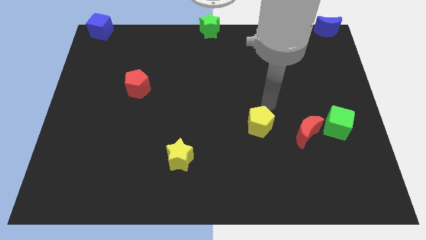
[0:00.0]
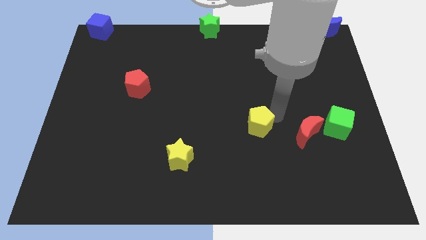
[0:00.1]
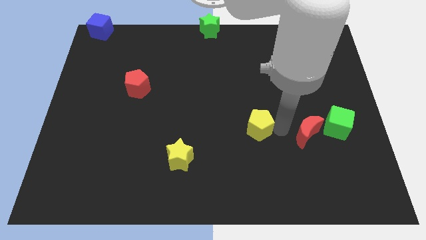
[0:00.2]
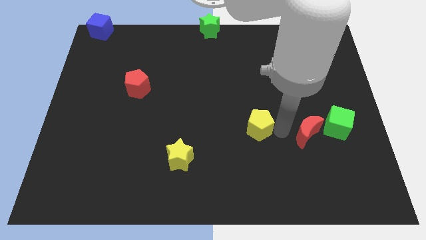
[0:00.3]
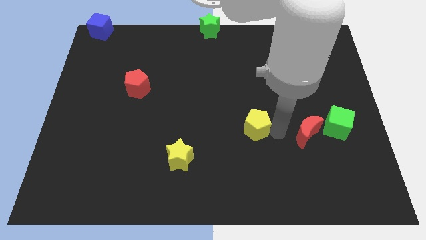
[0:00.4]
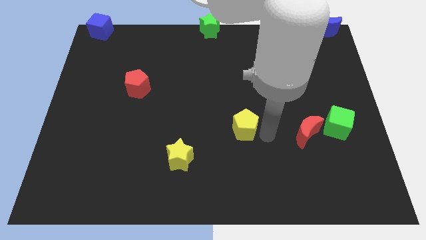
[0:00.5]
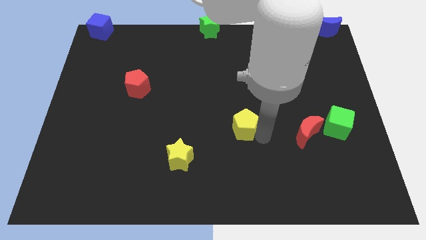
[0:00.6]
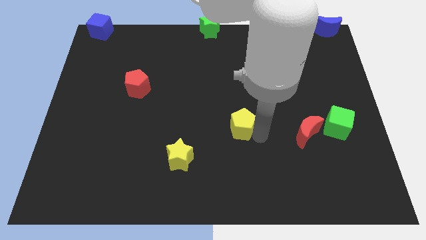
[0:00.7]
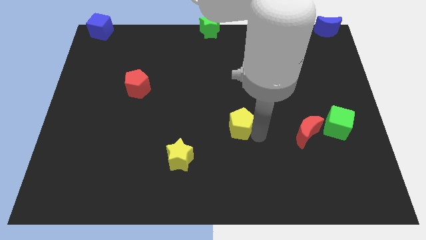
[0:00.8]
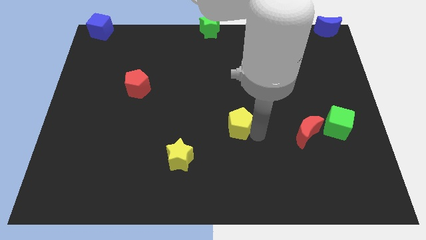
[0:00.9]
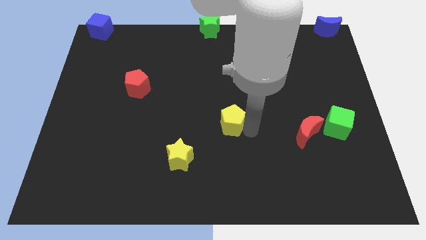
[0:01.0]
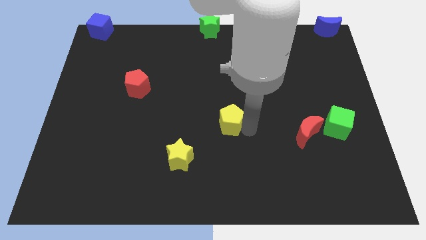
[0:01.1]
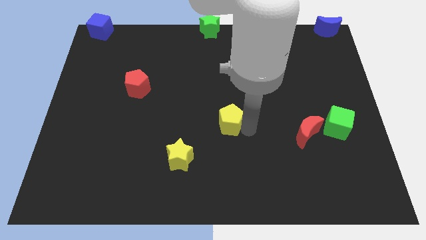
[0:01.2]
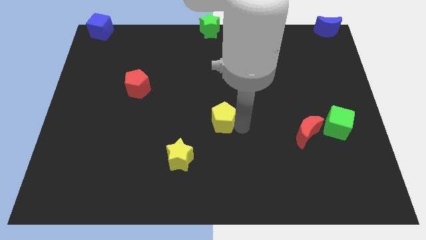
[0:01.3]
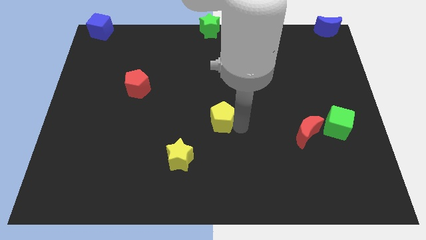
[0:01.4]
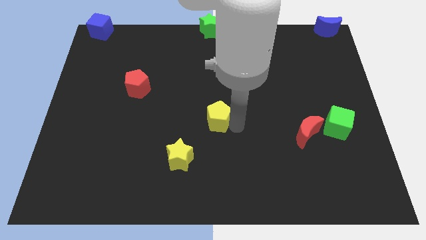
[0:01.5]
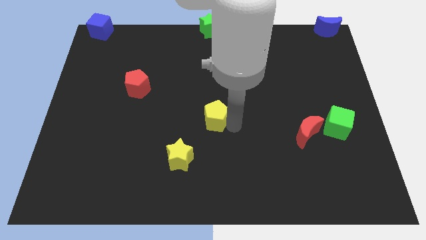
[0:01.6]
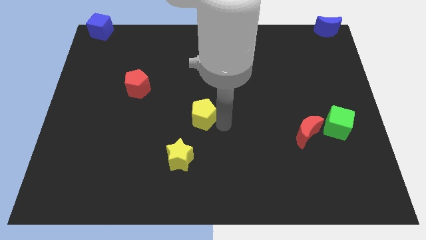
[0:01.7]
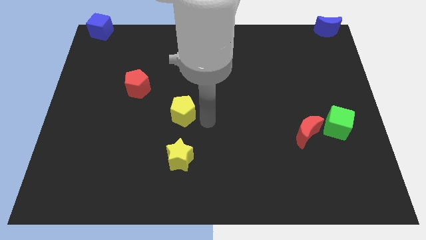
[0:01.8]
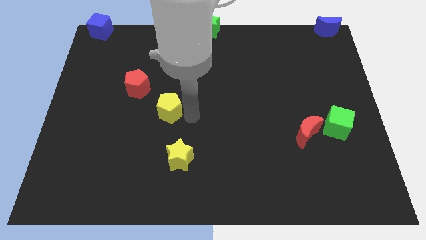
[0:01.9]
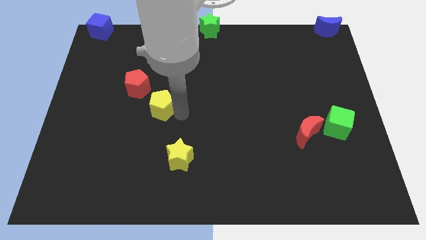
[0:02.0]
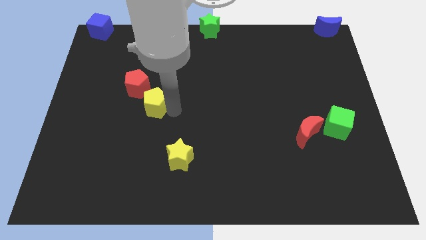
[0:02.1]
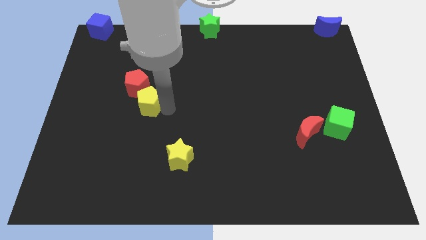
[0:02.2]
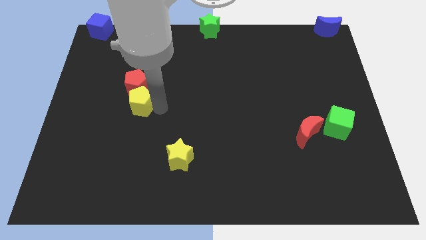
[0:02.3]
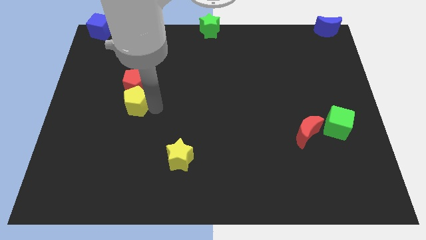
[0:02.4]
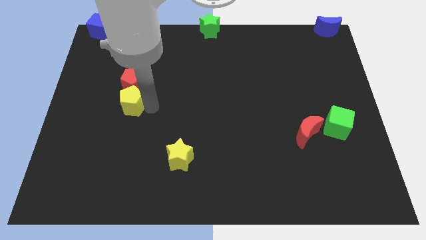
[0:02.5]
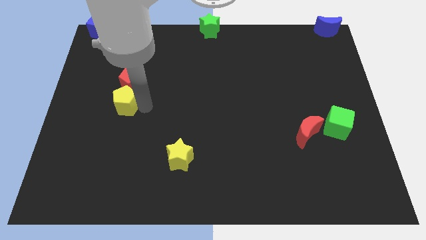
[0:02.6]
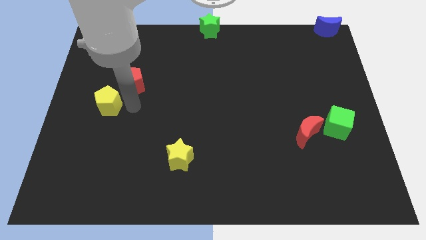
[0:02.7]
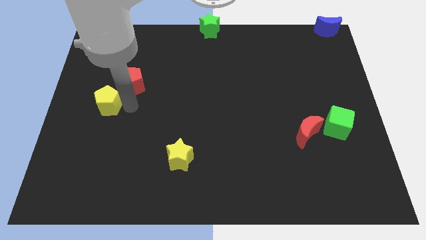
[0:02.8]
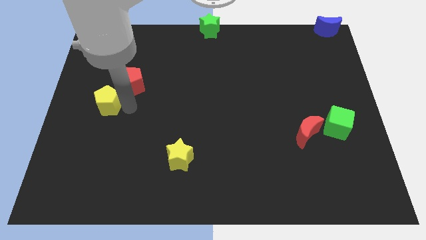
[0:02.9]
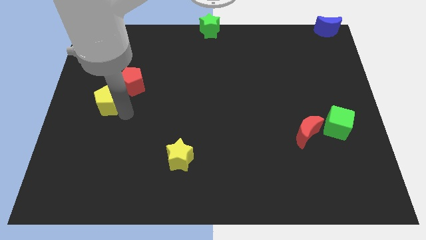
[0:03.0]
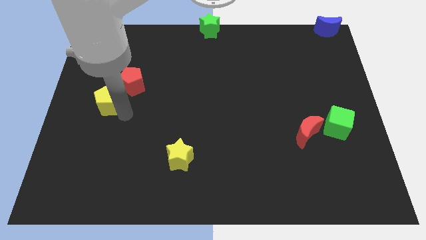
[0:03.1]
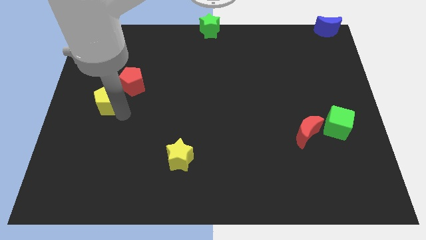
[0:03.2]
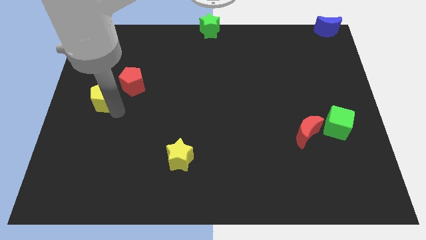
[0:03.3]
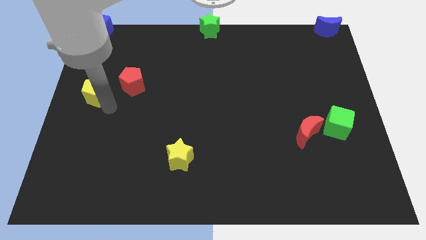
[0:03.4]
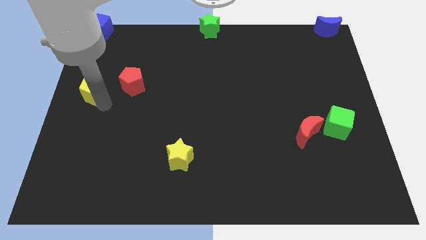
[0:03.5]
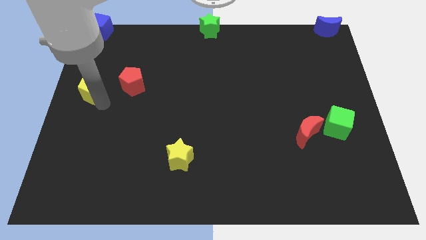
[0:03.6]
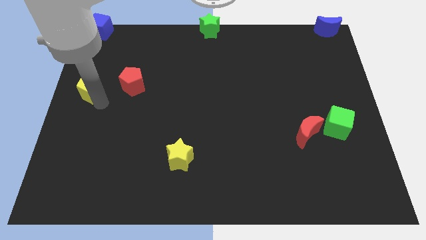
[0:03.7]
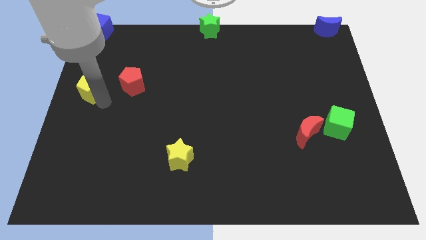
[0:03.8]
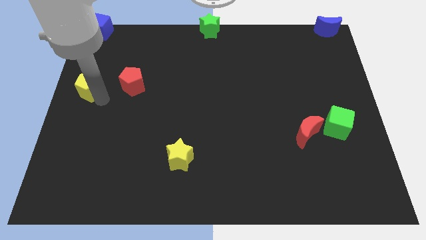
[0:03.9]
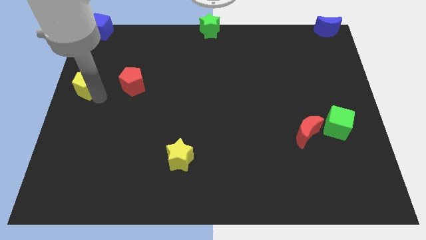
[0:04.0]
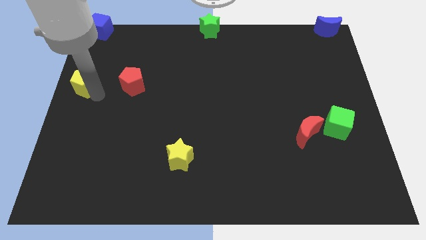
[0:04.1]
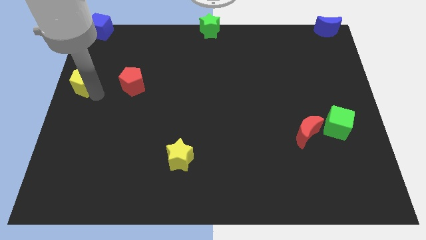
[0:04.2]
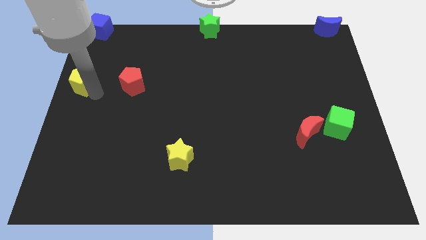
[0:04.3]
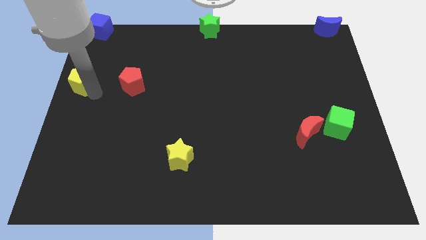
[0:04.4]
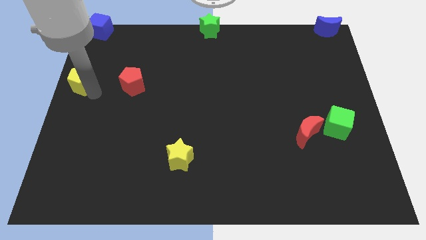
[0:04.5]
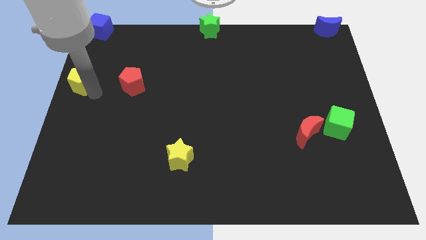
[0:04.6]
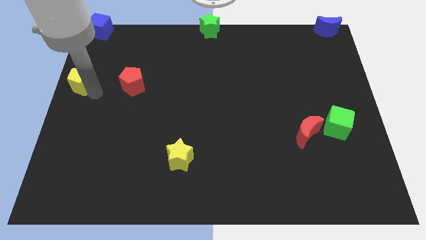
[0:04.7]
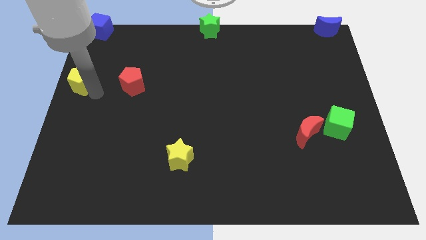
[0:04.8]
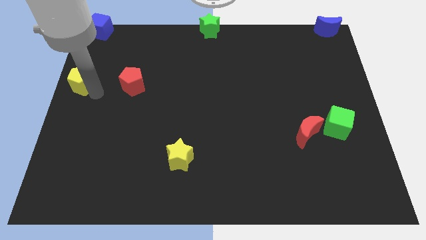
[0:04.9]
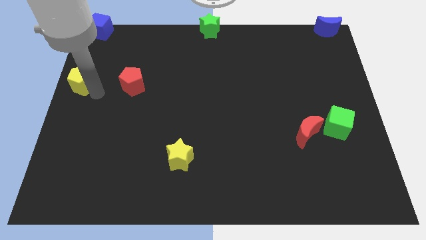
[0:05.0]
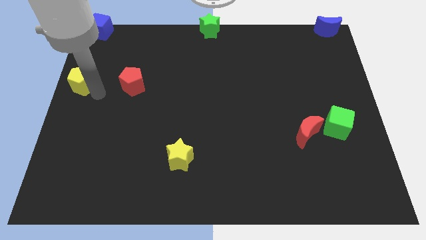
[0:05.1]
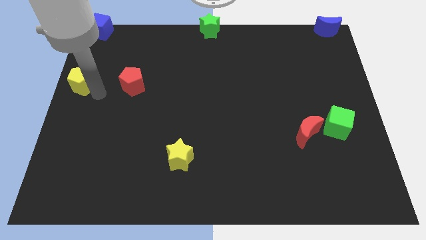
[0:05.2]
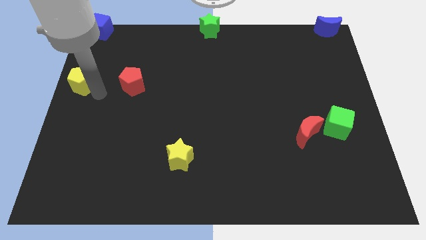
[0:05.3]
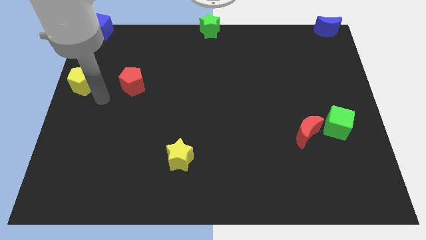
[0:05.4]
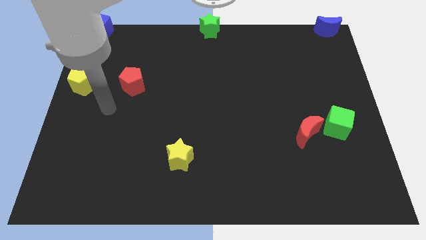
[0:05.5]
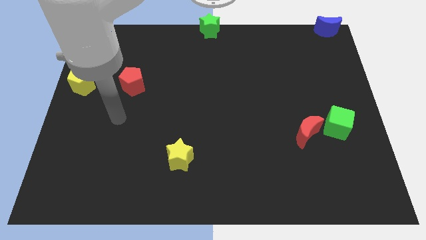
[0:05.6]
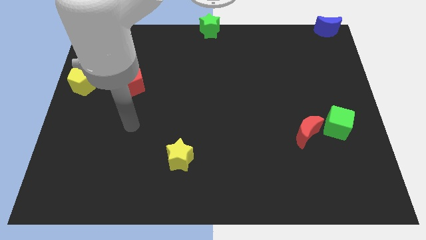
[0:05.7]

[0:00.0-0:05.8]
place the yellow pentagon left to the red pentagon

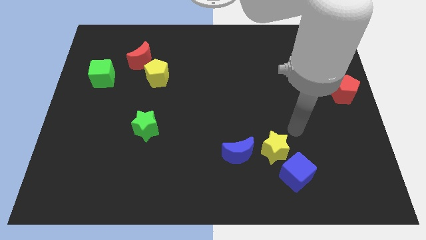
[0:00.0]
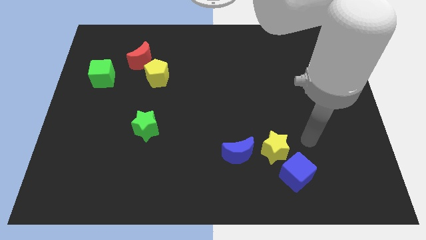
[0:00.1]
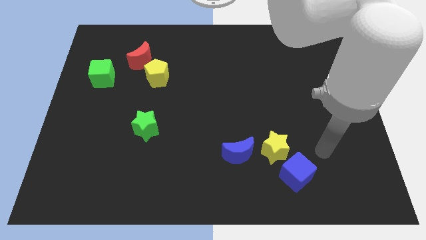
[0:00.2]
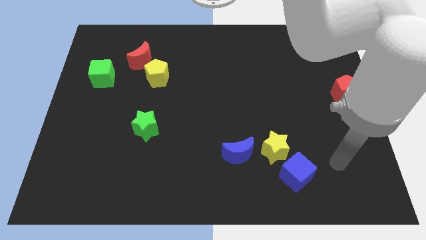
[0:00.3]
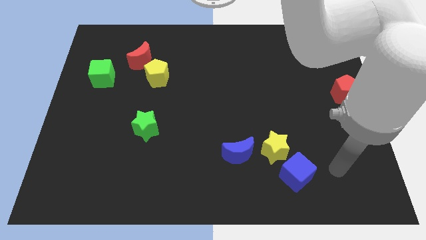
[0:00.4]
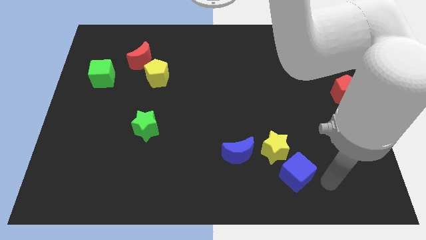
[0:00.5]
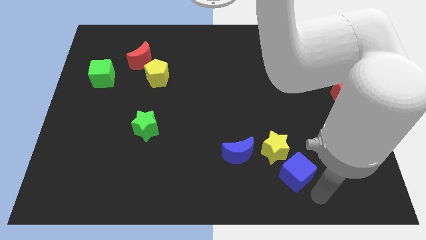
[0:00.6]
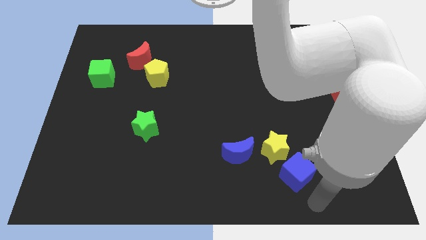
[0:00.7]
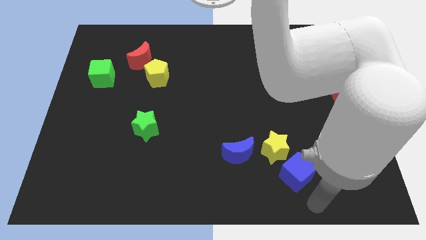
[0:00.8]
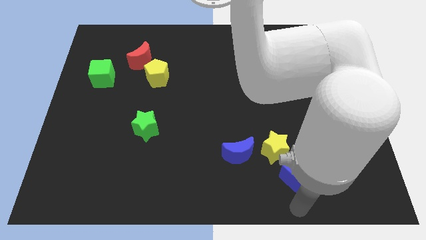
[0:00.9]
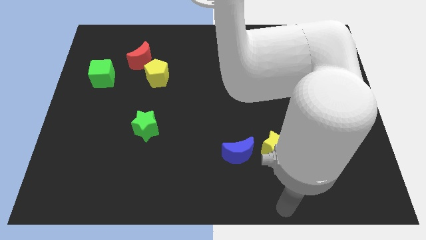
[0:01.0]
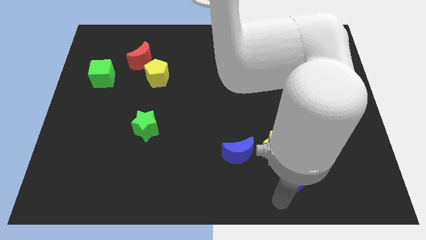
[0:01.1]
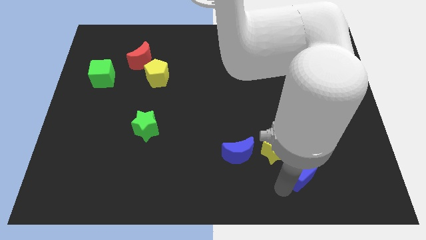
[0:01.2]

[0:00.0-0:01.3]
move your arm below the blue cube

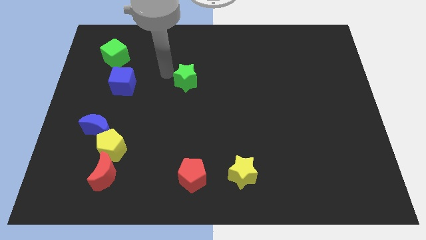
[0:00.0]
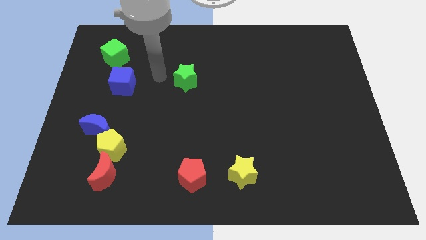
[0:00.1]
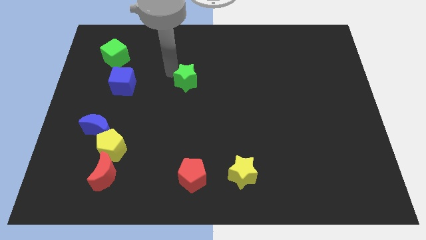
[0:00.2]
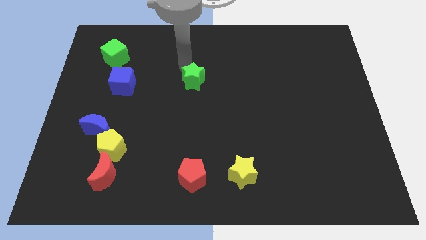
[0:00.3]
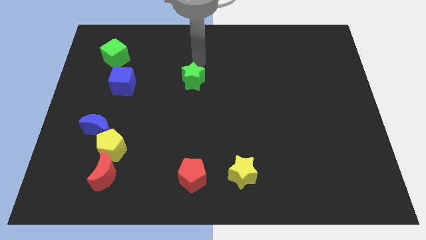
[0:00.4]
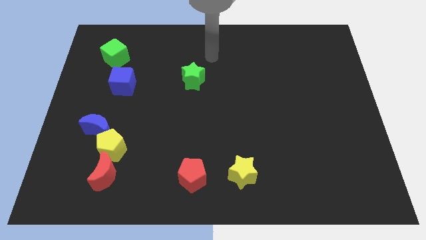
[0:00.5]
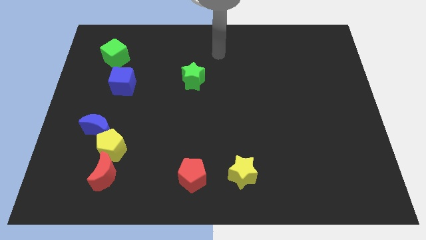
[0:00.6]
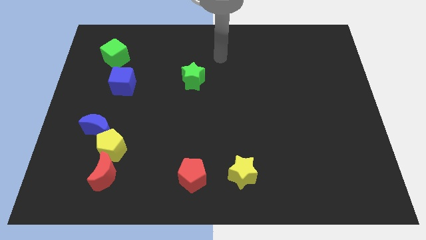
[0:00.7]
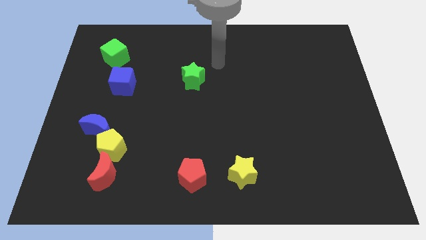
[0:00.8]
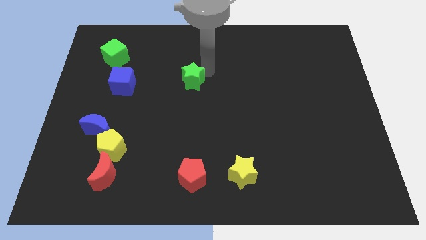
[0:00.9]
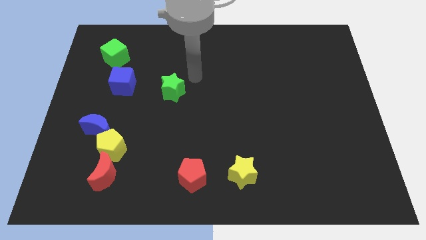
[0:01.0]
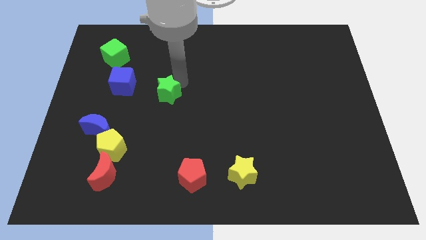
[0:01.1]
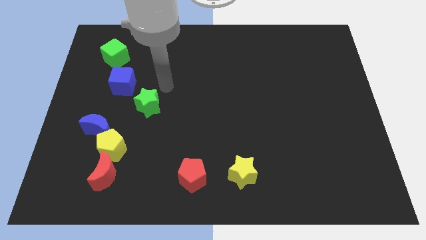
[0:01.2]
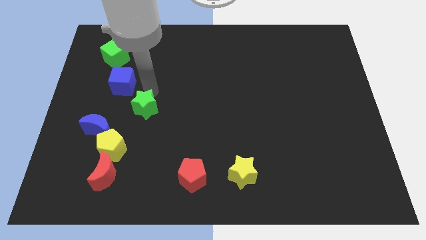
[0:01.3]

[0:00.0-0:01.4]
push the green star towards the yellow pentagon

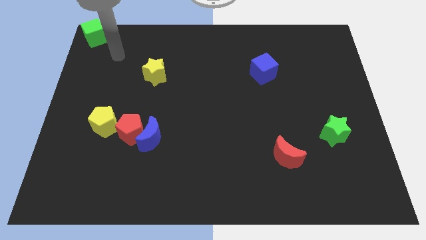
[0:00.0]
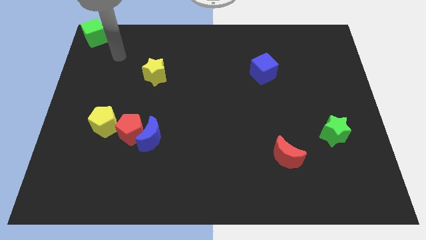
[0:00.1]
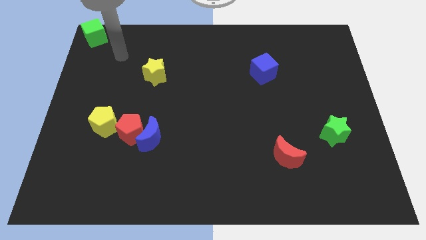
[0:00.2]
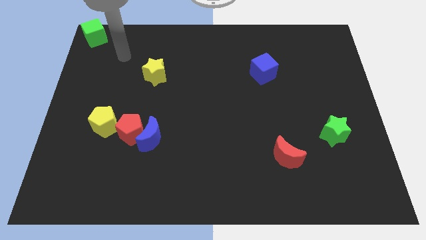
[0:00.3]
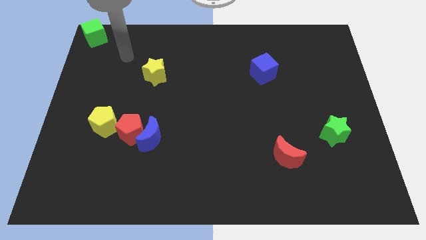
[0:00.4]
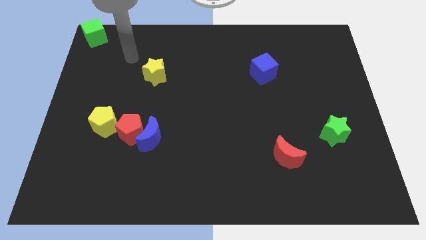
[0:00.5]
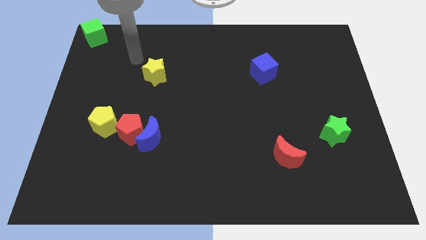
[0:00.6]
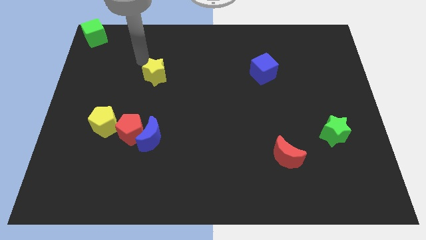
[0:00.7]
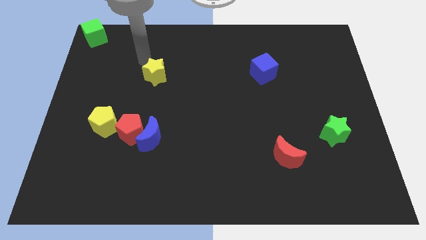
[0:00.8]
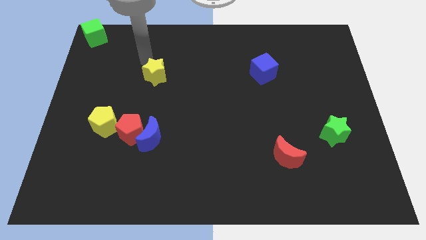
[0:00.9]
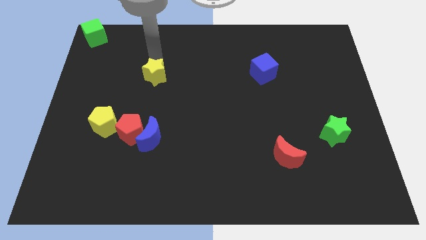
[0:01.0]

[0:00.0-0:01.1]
place your arm at the top of the yellow star
